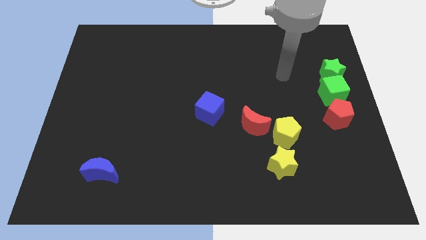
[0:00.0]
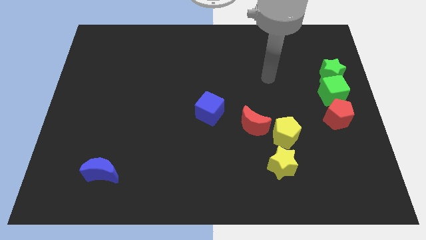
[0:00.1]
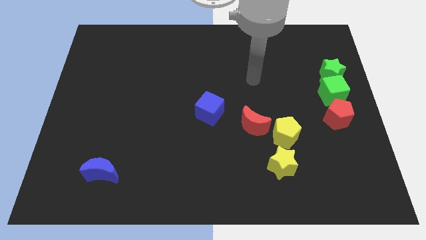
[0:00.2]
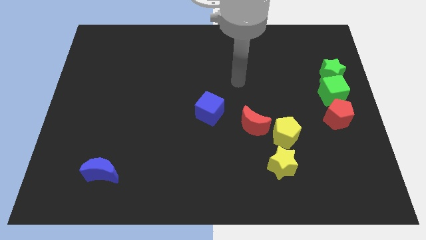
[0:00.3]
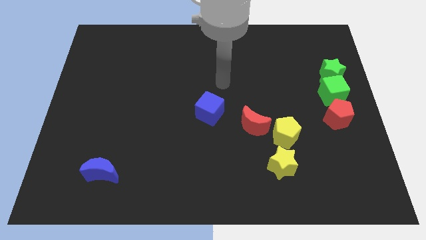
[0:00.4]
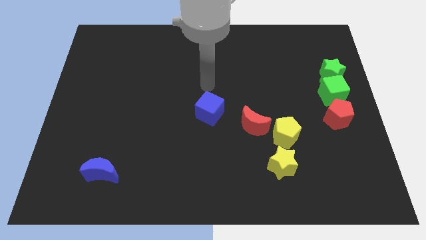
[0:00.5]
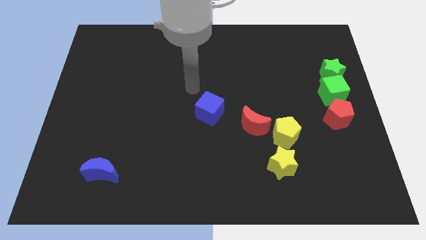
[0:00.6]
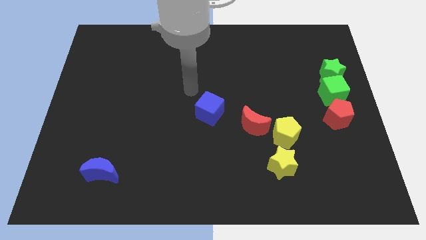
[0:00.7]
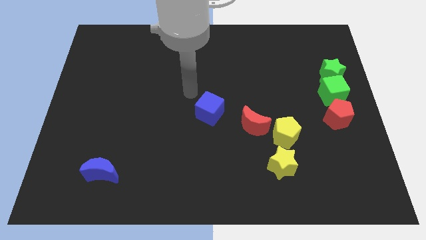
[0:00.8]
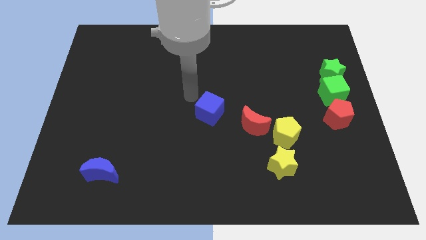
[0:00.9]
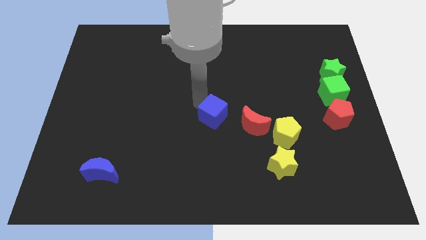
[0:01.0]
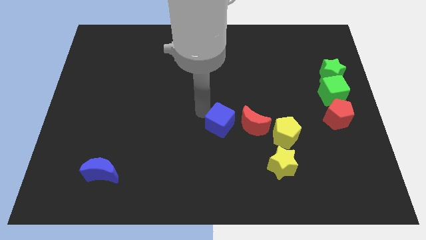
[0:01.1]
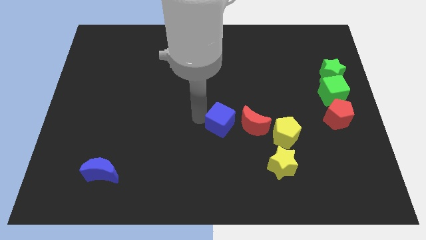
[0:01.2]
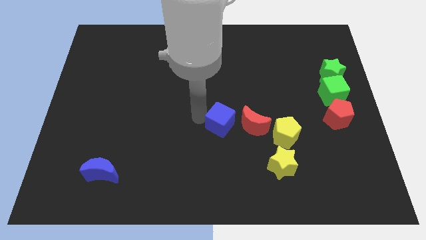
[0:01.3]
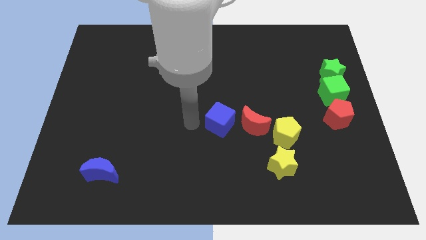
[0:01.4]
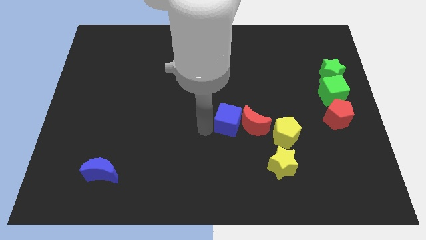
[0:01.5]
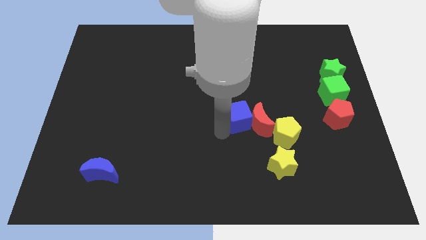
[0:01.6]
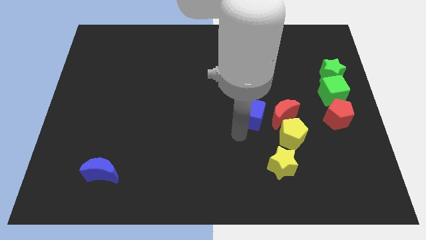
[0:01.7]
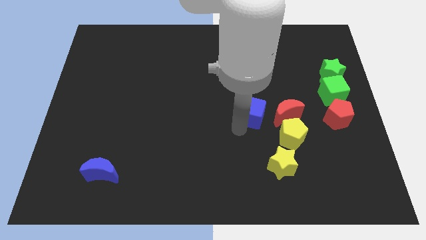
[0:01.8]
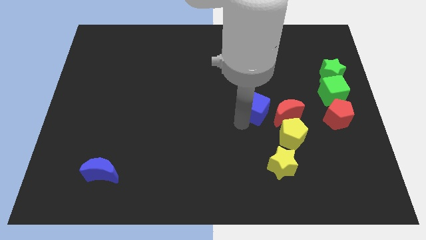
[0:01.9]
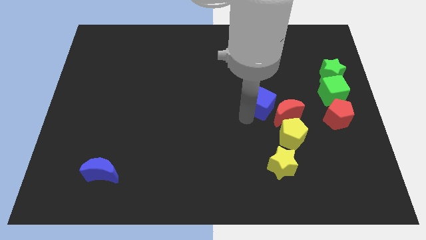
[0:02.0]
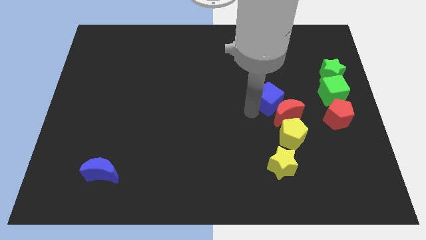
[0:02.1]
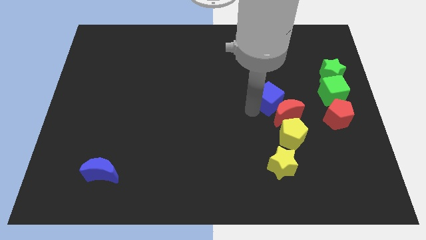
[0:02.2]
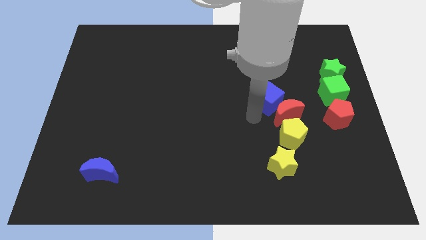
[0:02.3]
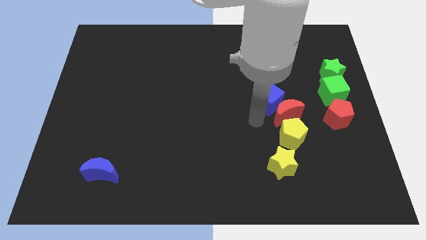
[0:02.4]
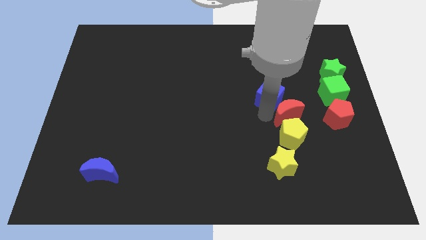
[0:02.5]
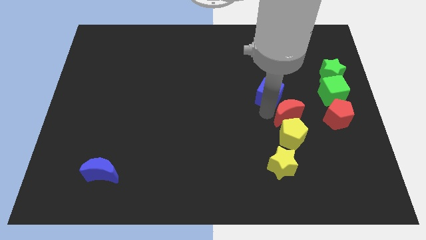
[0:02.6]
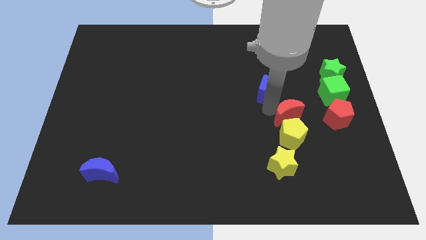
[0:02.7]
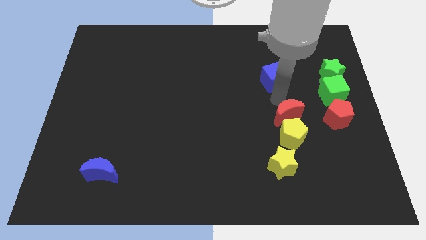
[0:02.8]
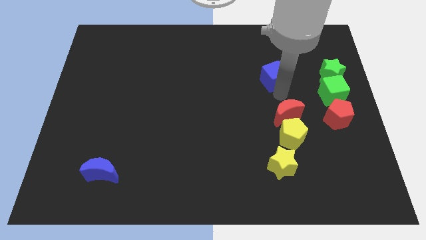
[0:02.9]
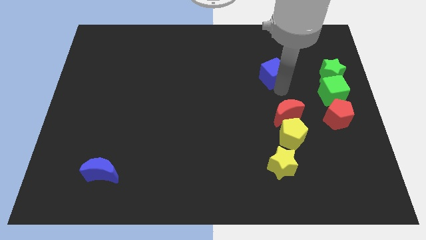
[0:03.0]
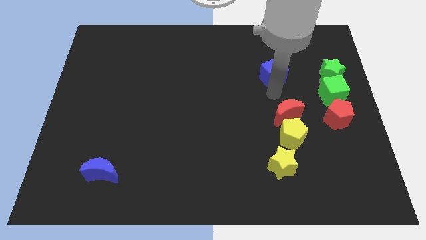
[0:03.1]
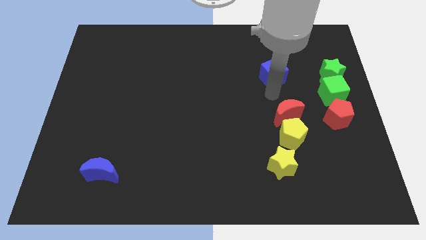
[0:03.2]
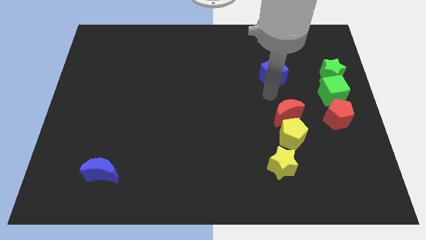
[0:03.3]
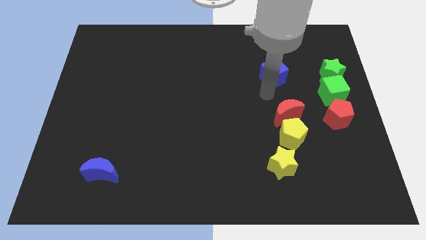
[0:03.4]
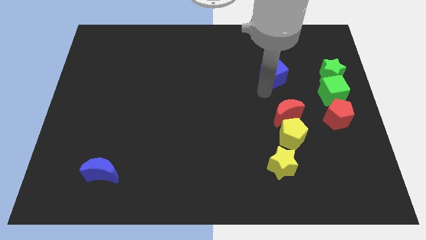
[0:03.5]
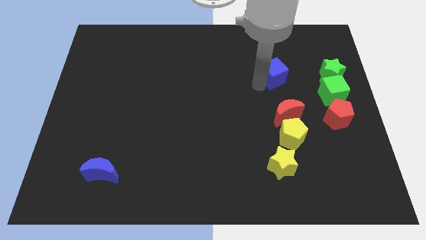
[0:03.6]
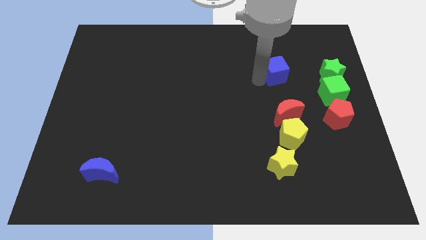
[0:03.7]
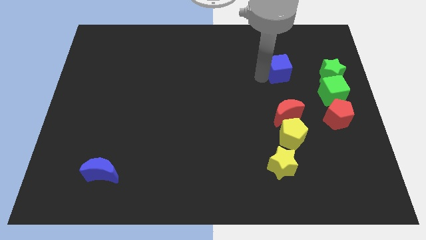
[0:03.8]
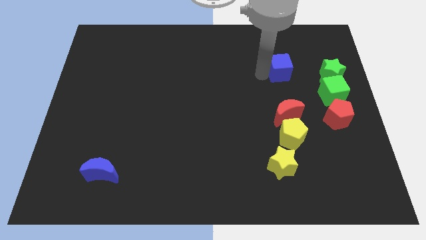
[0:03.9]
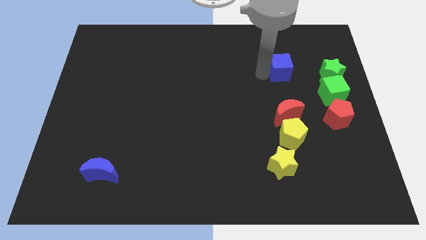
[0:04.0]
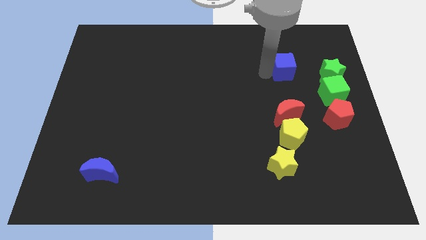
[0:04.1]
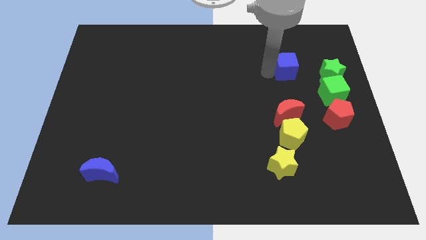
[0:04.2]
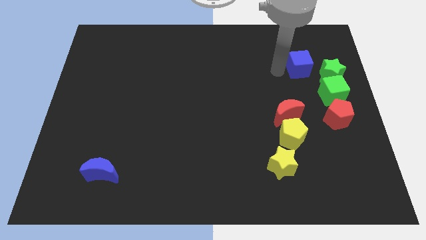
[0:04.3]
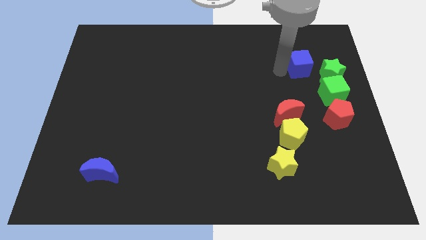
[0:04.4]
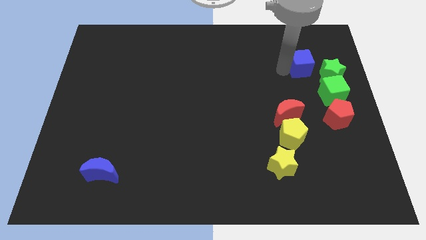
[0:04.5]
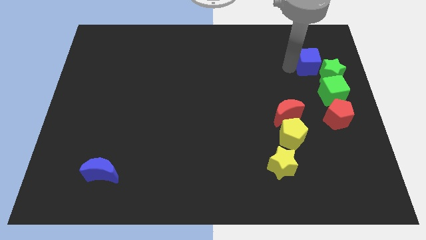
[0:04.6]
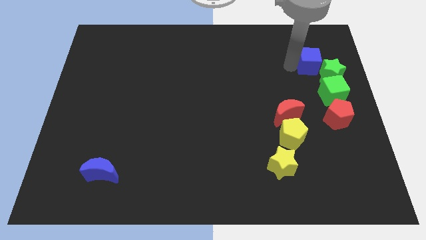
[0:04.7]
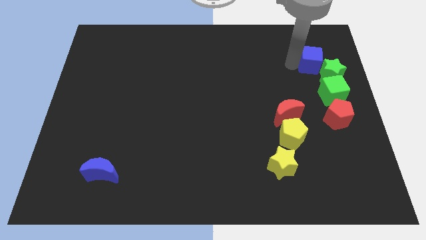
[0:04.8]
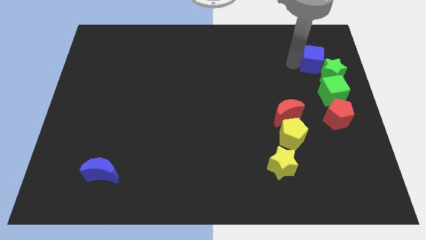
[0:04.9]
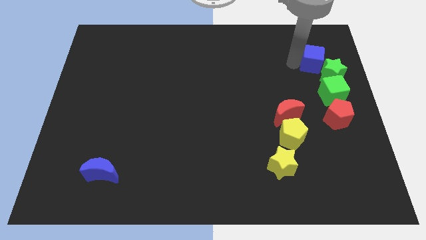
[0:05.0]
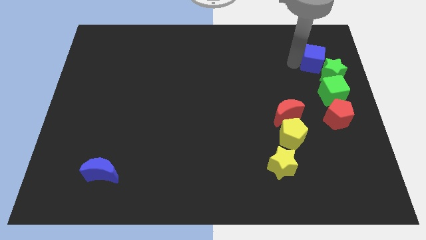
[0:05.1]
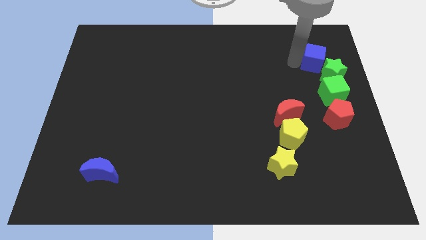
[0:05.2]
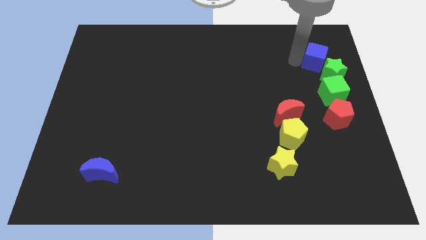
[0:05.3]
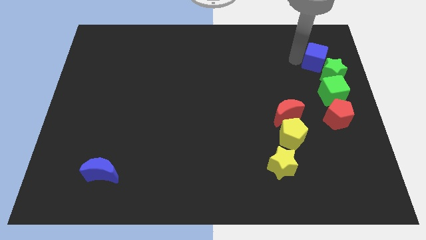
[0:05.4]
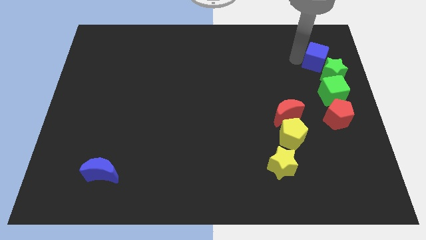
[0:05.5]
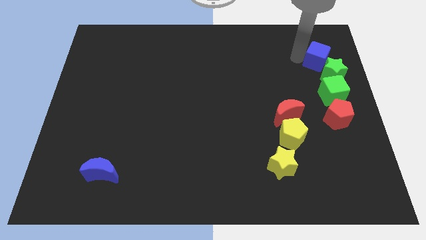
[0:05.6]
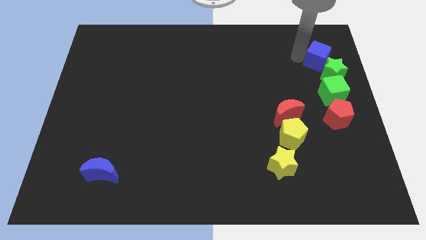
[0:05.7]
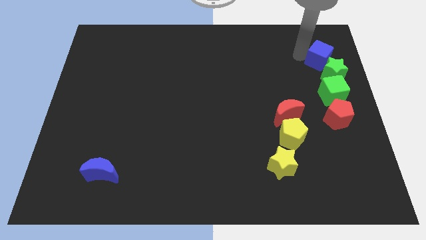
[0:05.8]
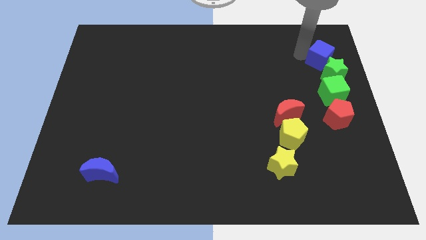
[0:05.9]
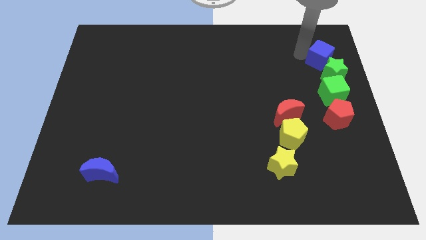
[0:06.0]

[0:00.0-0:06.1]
move the blue cube above to the green star

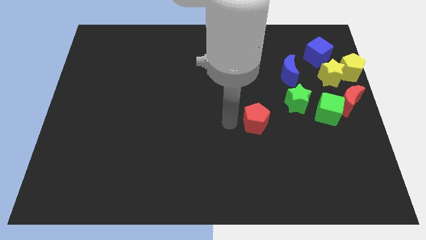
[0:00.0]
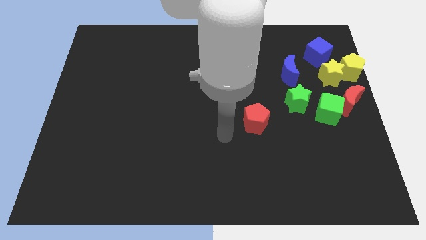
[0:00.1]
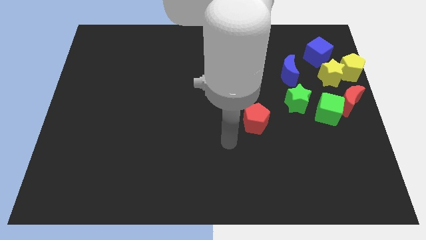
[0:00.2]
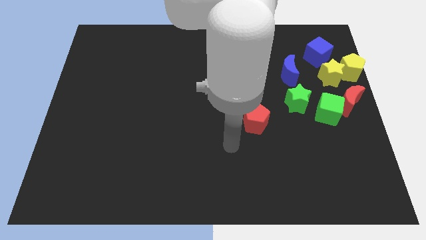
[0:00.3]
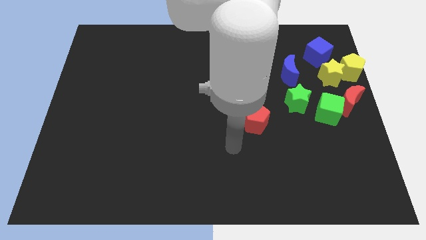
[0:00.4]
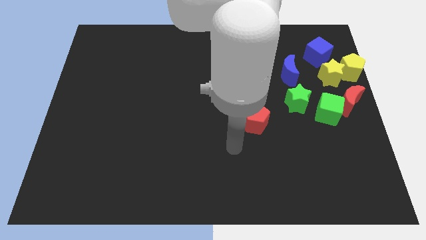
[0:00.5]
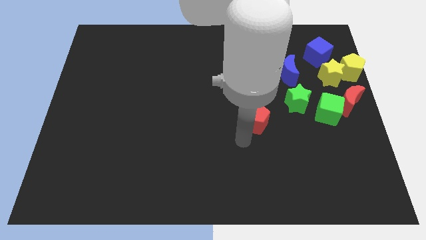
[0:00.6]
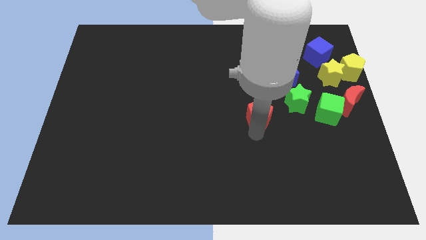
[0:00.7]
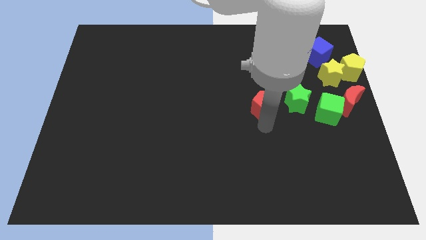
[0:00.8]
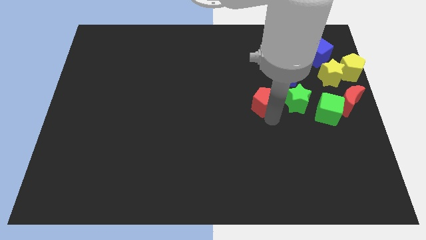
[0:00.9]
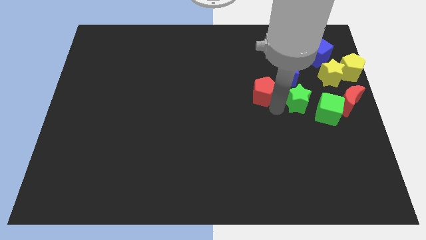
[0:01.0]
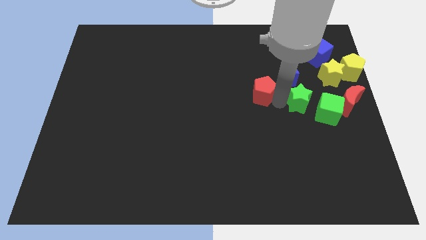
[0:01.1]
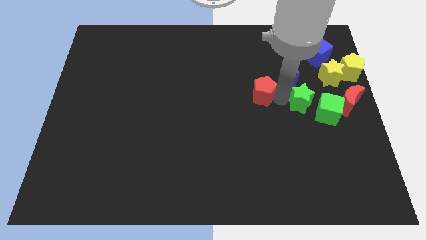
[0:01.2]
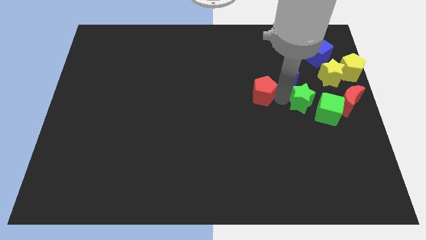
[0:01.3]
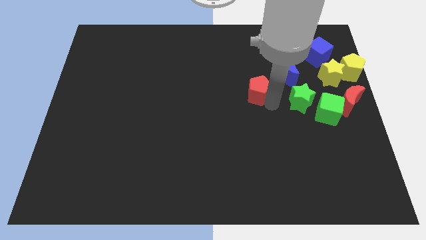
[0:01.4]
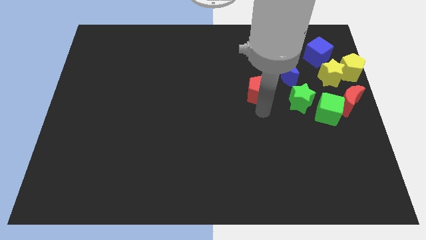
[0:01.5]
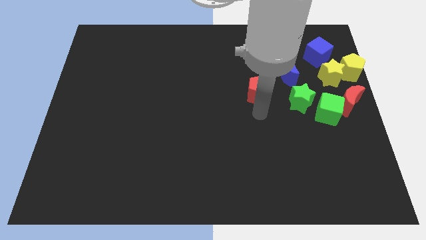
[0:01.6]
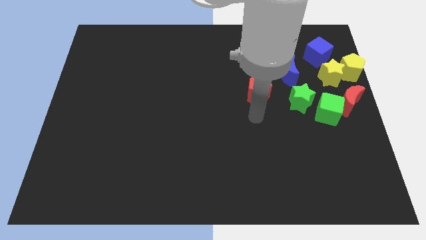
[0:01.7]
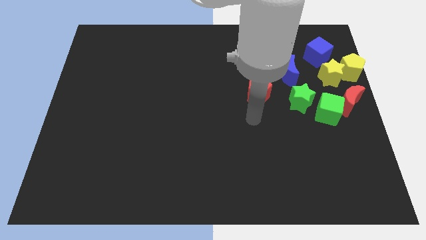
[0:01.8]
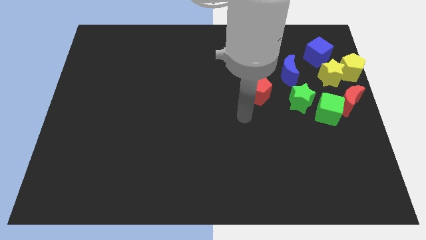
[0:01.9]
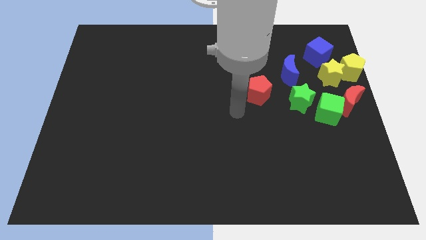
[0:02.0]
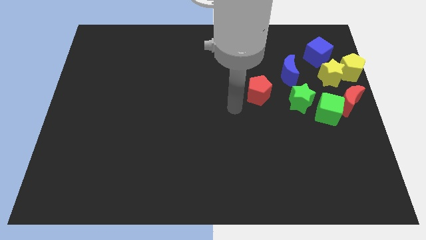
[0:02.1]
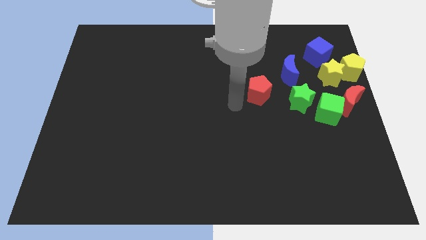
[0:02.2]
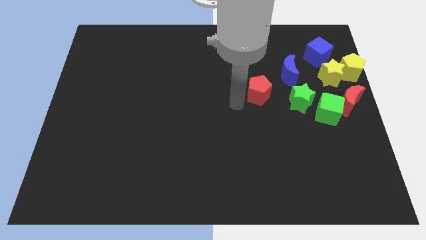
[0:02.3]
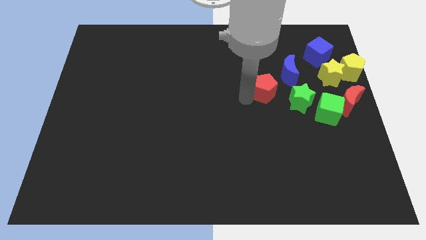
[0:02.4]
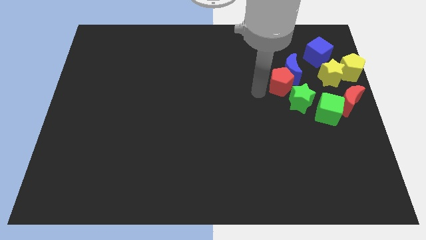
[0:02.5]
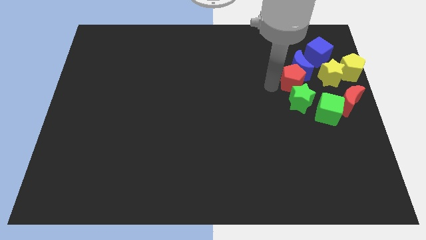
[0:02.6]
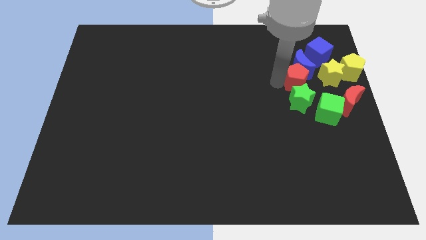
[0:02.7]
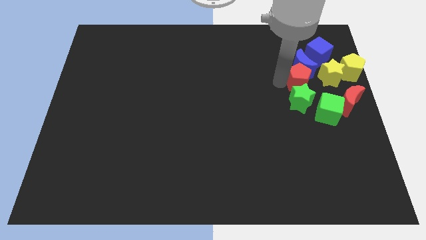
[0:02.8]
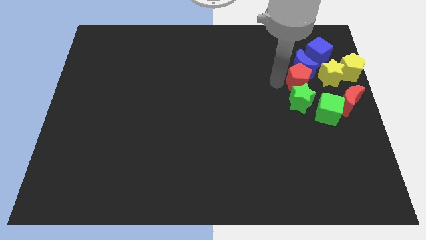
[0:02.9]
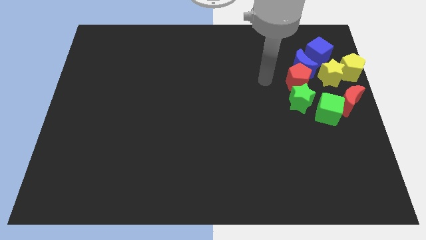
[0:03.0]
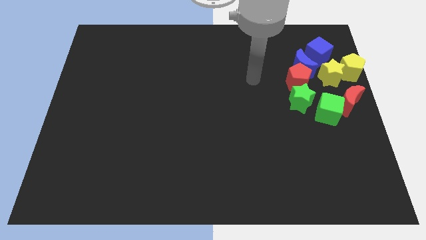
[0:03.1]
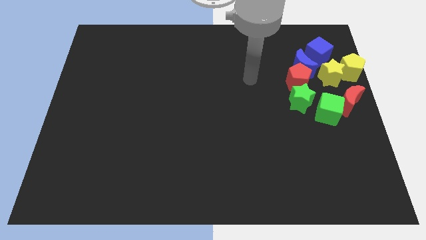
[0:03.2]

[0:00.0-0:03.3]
place red pentagon in between blue crescent and green star
